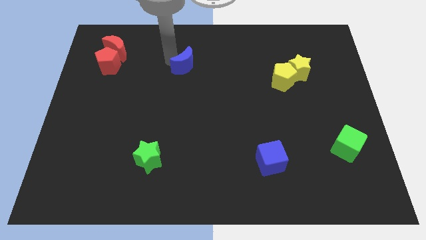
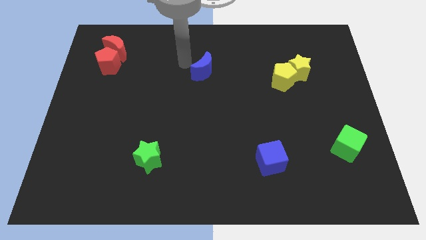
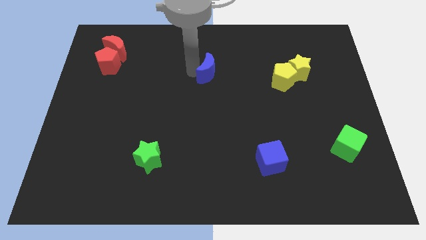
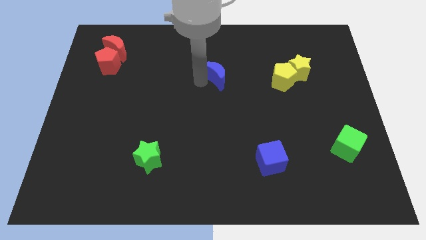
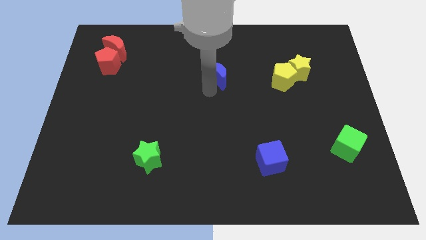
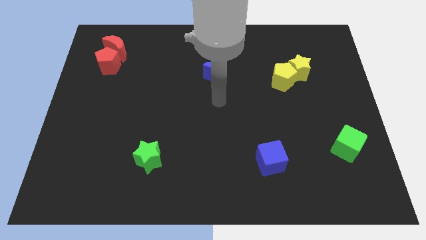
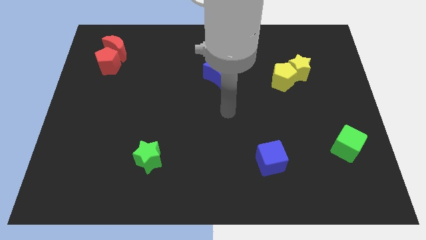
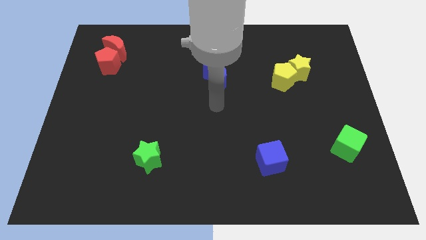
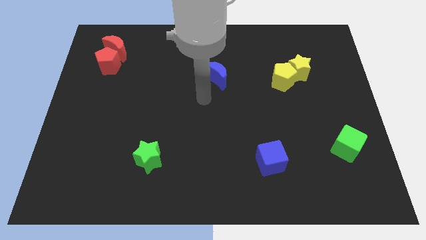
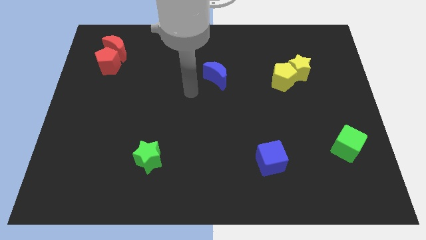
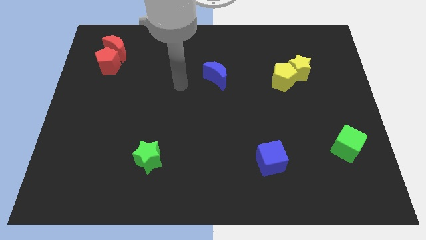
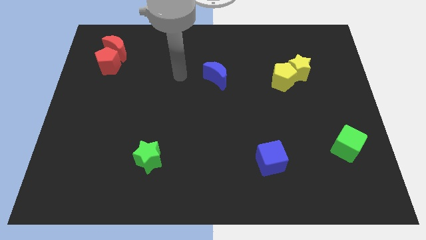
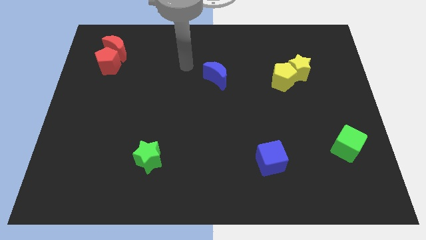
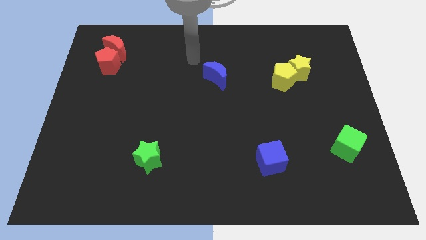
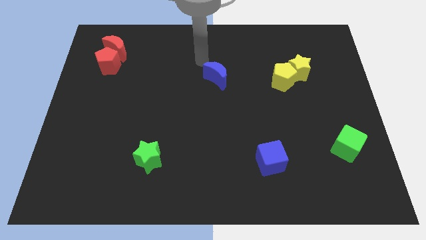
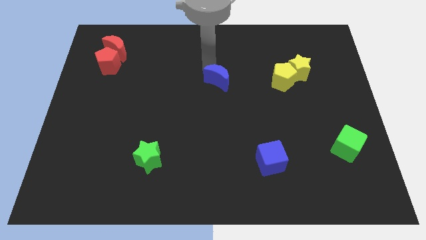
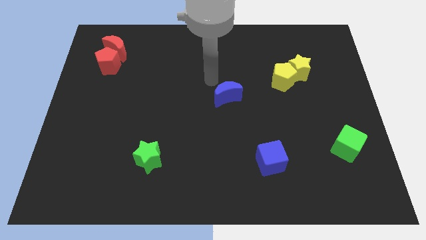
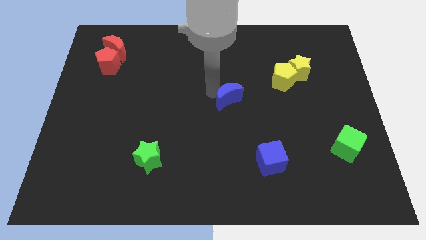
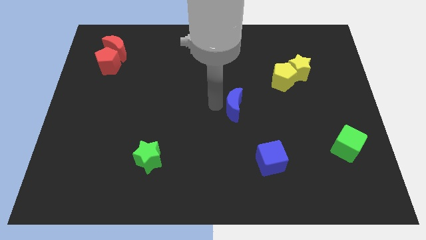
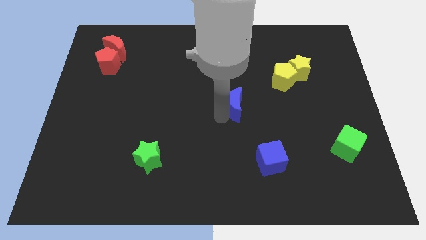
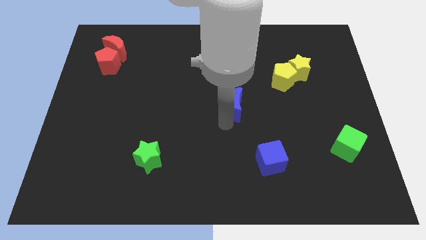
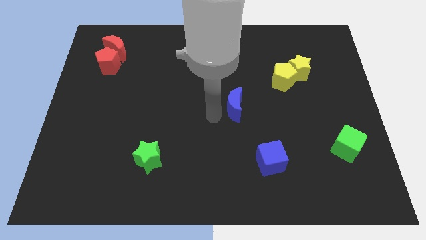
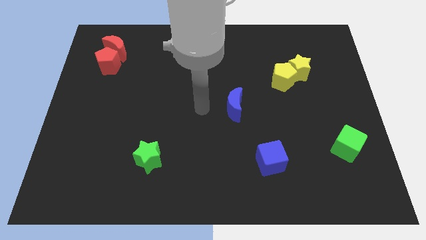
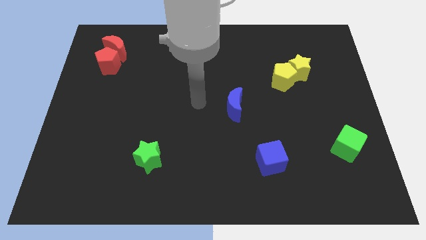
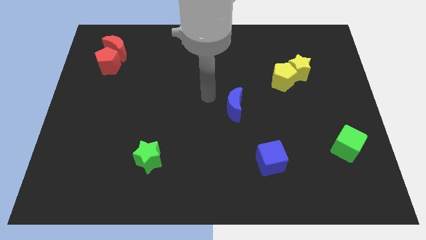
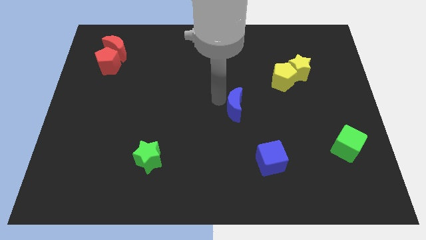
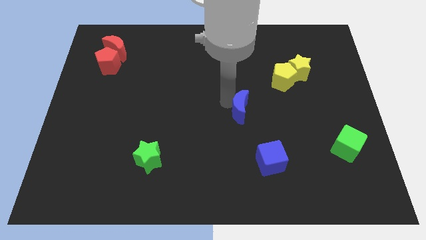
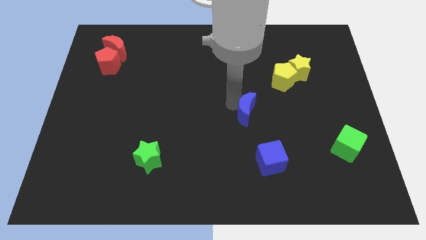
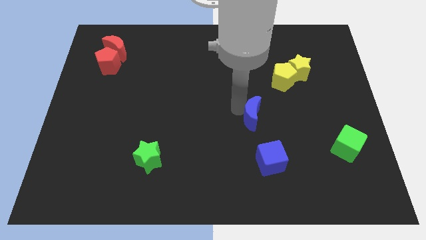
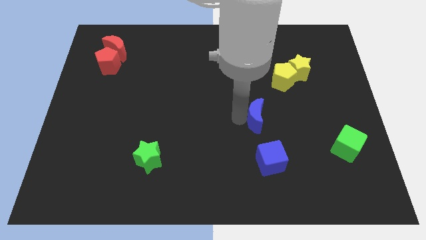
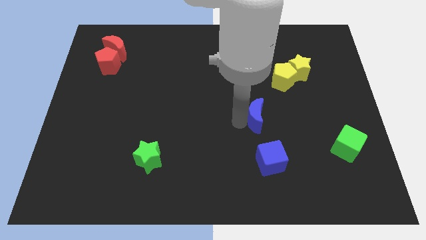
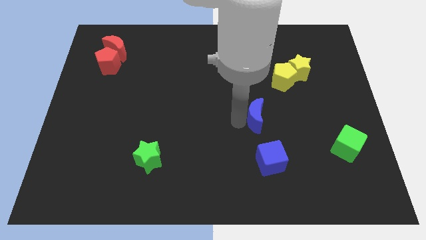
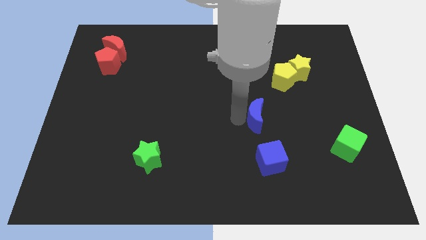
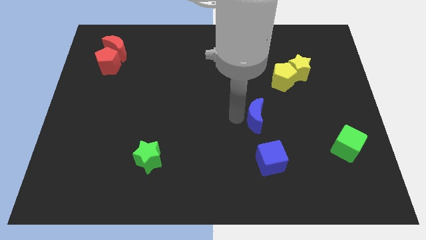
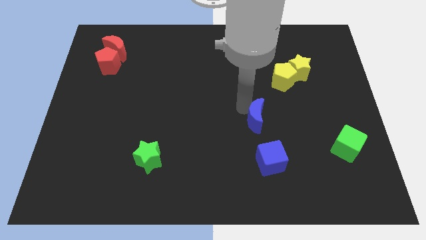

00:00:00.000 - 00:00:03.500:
place blue moon to the top of blue cube

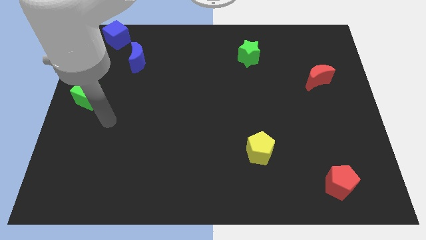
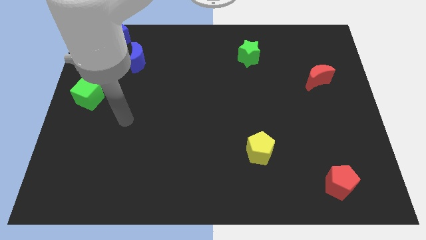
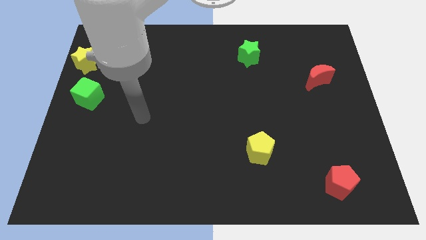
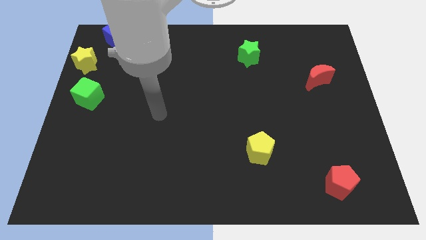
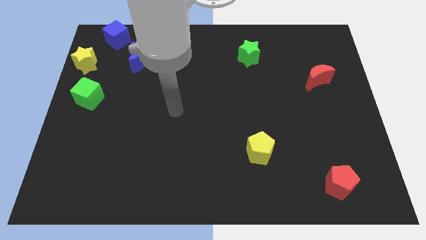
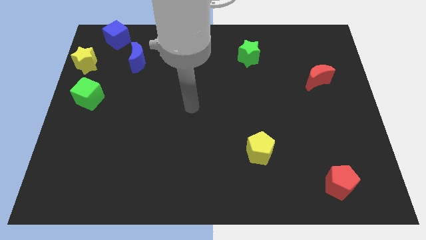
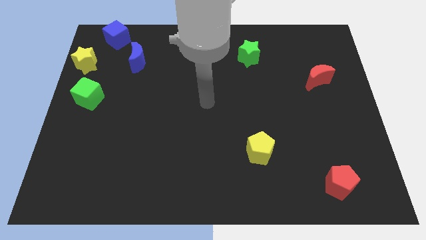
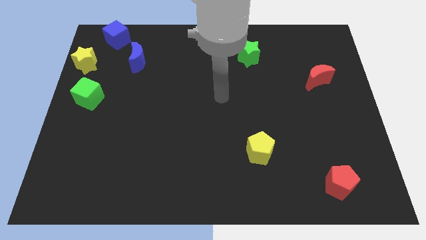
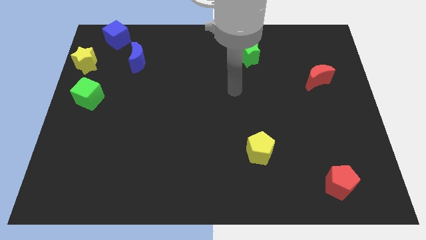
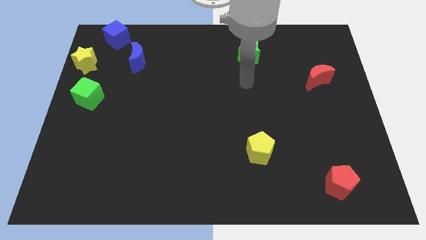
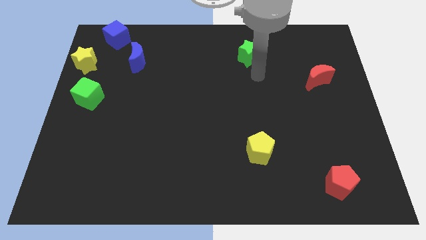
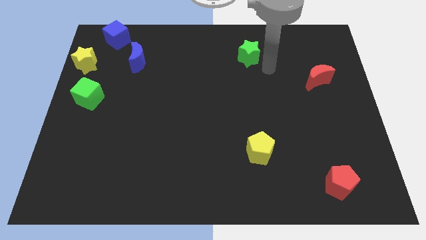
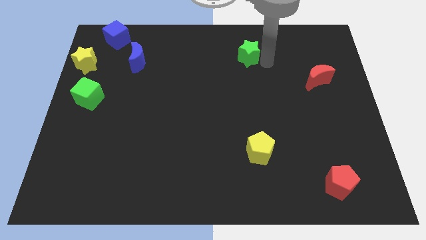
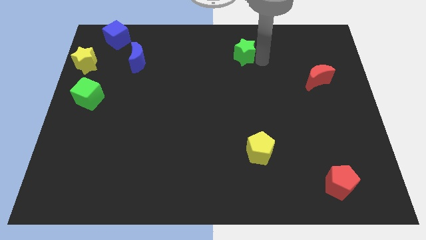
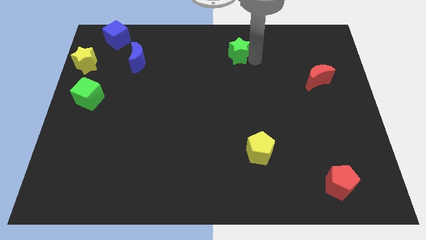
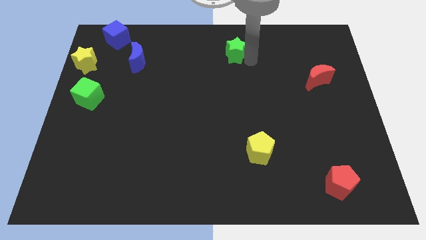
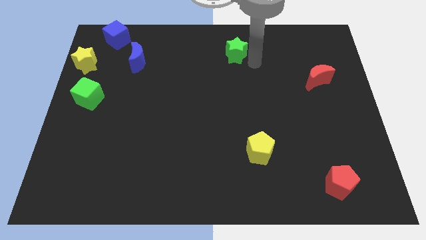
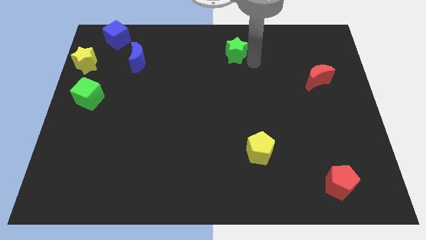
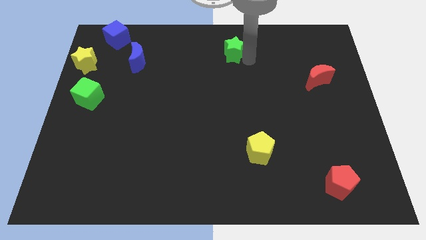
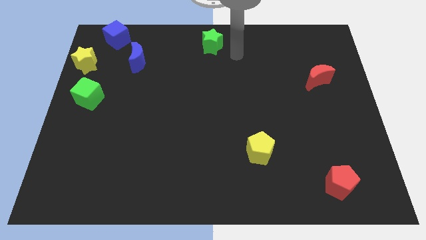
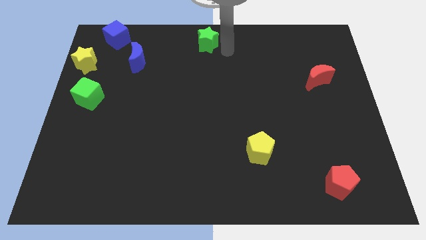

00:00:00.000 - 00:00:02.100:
move green star to the top center

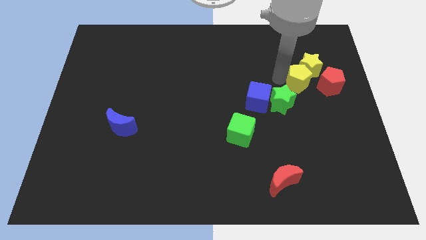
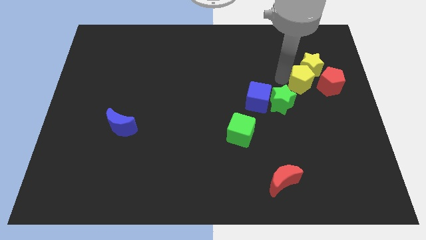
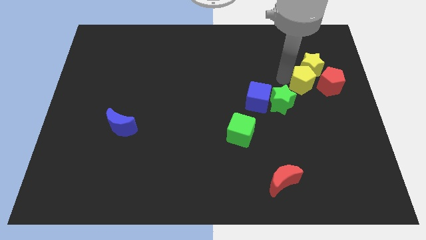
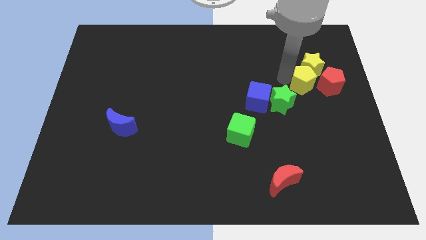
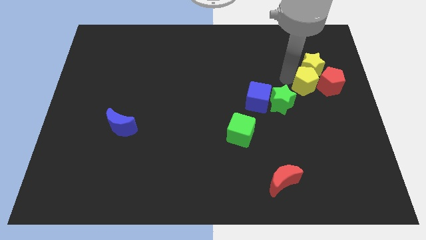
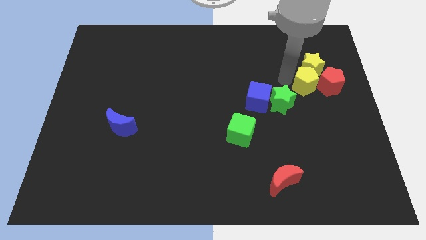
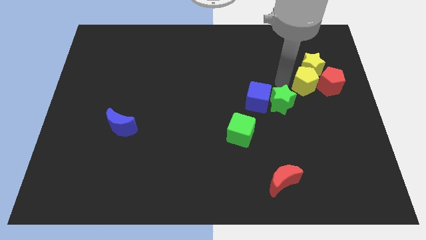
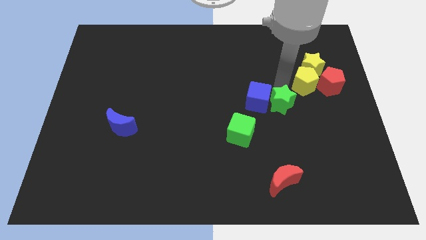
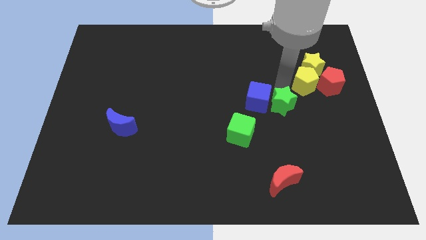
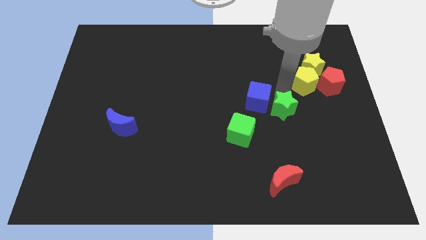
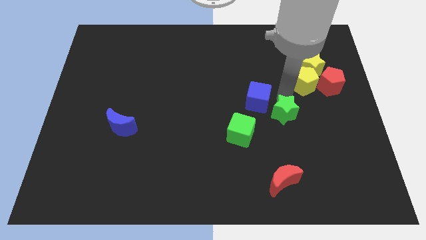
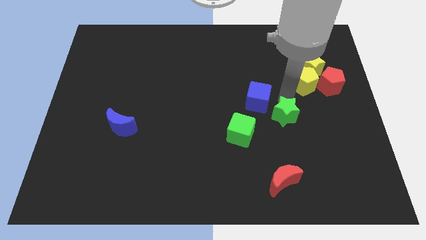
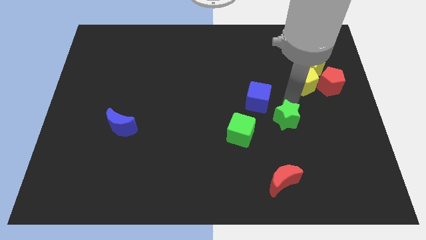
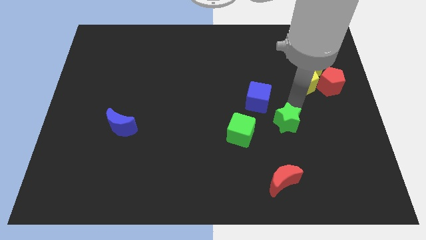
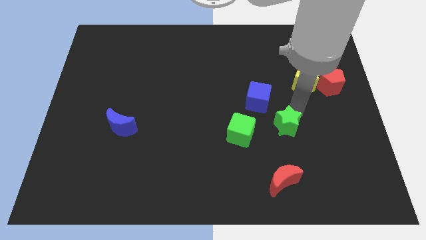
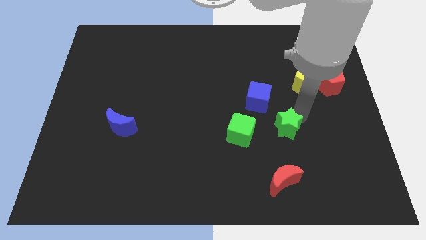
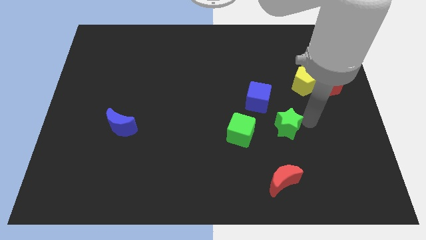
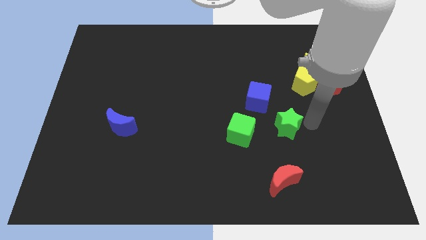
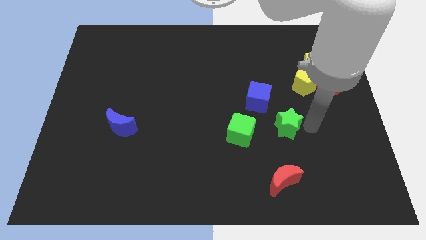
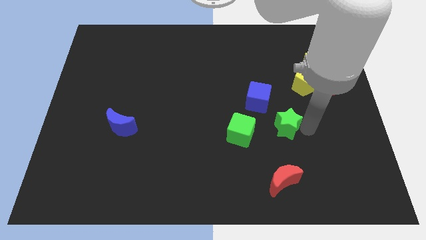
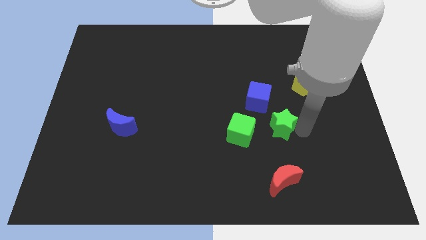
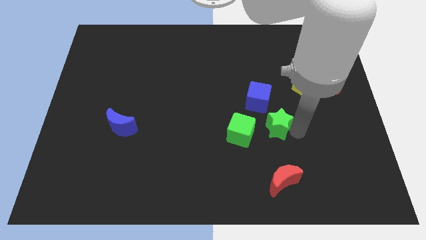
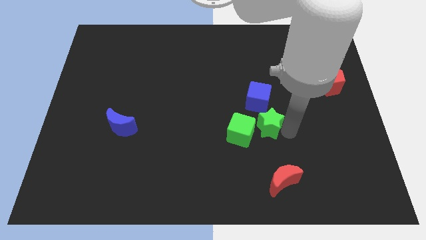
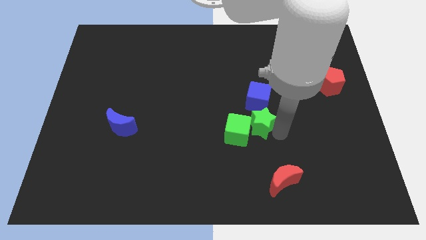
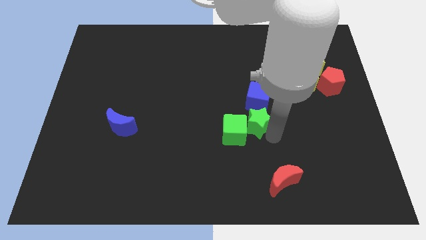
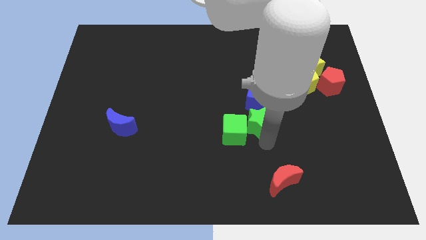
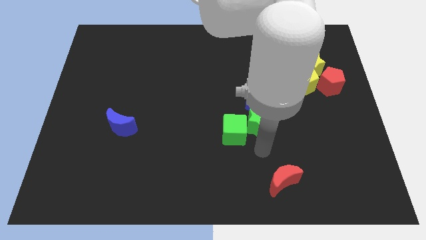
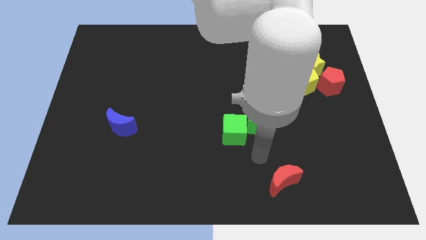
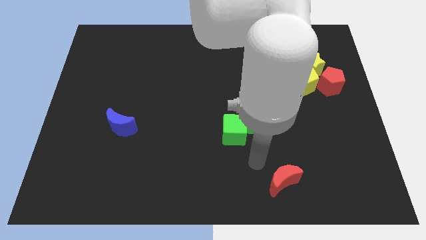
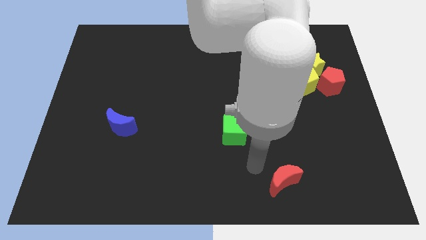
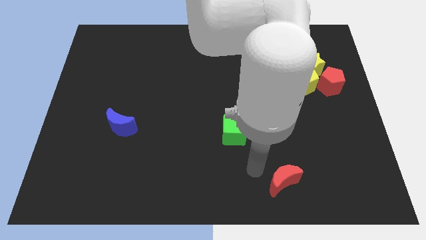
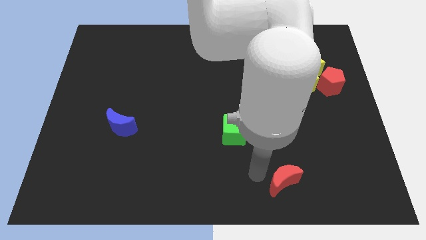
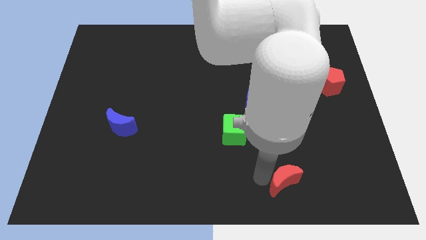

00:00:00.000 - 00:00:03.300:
push green star towards green cube

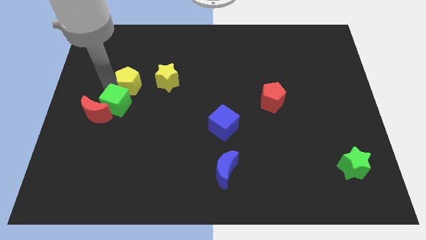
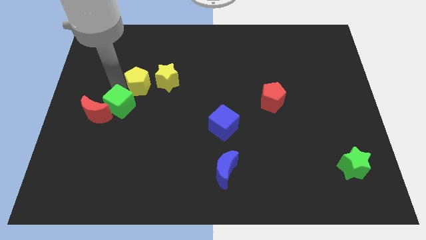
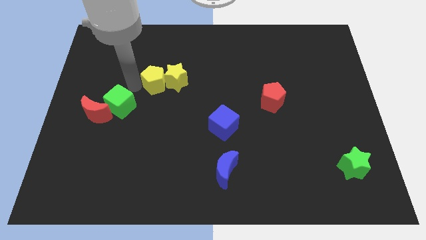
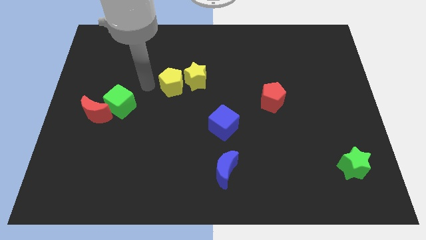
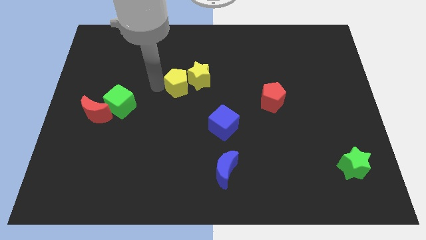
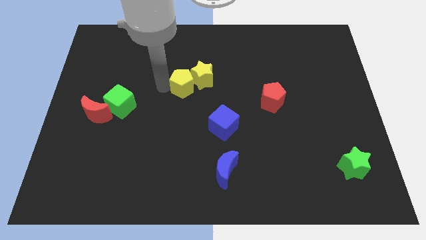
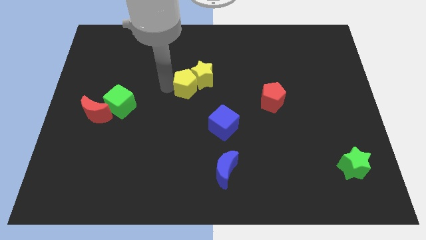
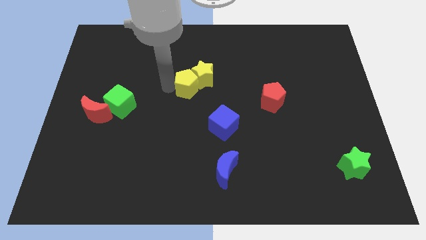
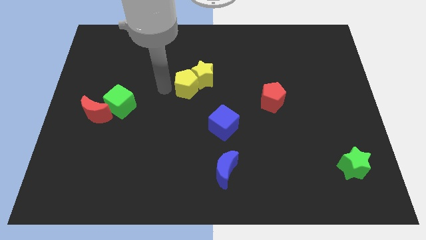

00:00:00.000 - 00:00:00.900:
separate yellow pentagon from the green cube
